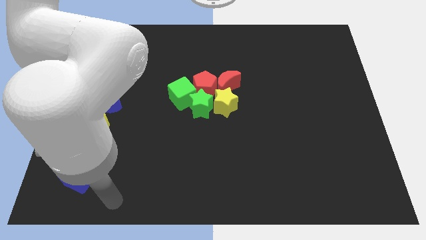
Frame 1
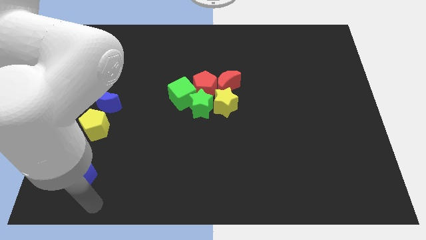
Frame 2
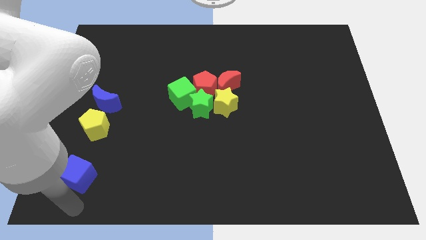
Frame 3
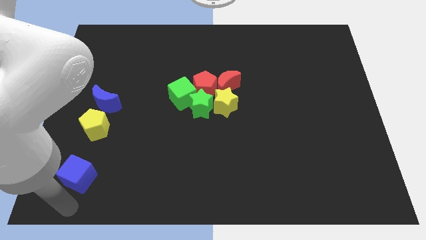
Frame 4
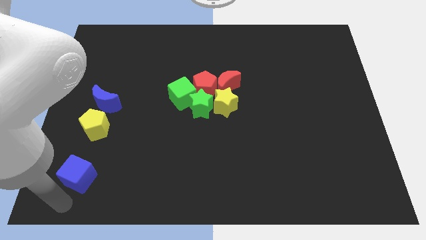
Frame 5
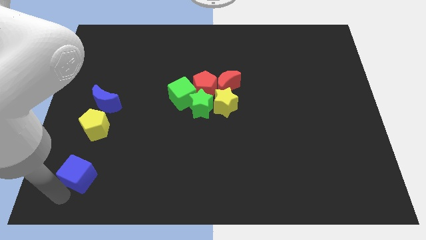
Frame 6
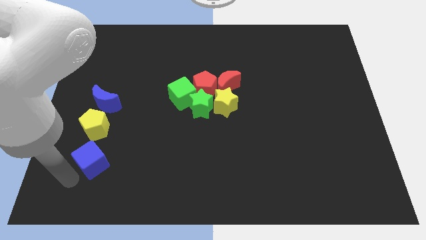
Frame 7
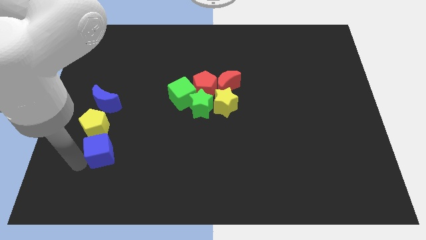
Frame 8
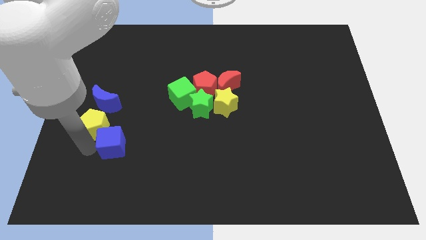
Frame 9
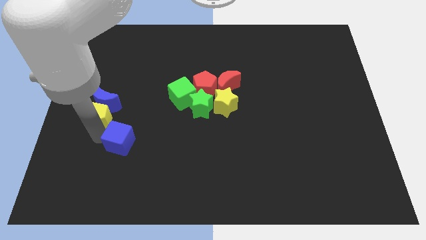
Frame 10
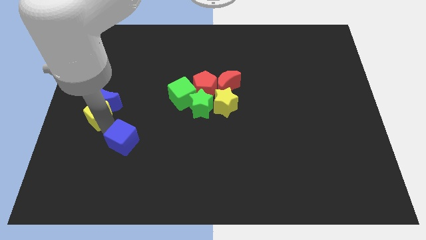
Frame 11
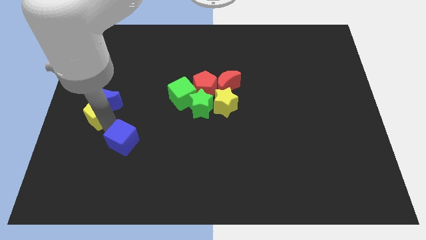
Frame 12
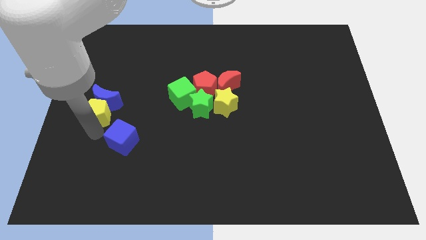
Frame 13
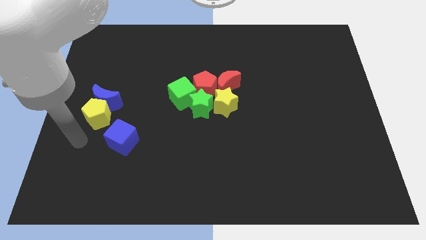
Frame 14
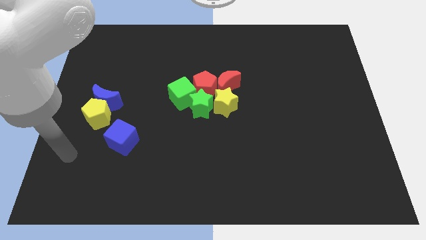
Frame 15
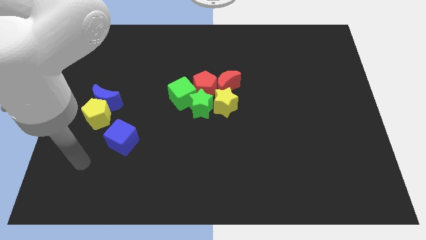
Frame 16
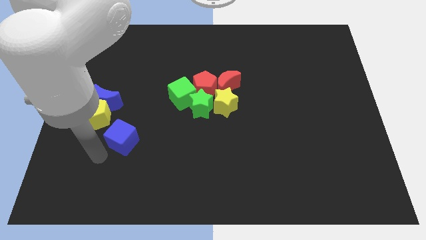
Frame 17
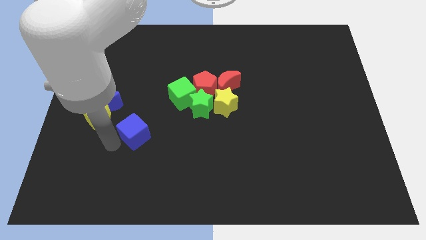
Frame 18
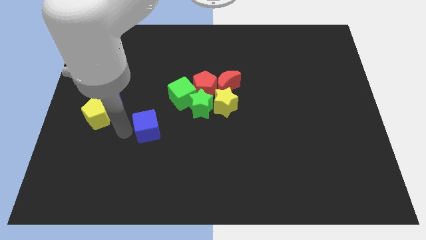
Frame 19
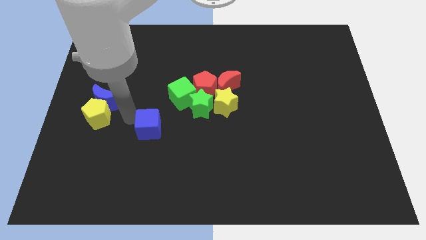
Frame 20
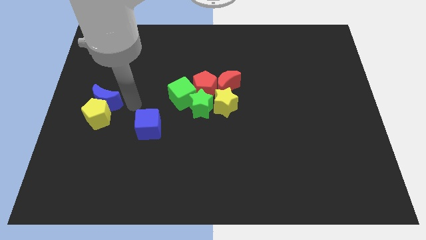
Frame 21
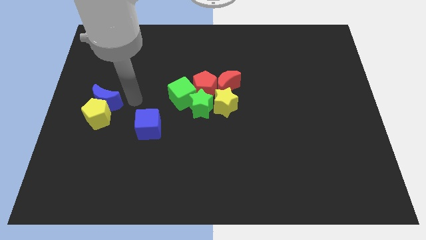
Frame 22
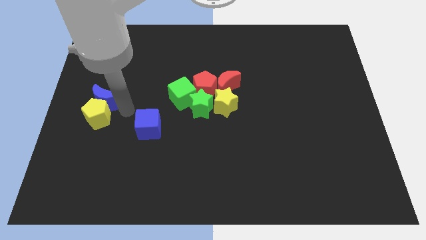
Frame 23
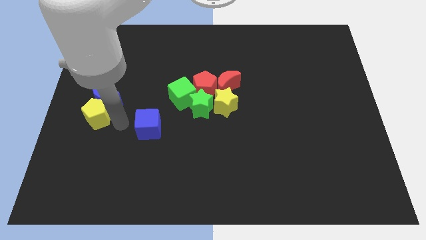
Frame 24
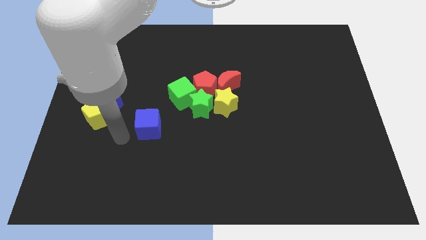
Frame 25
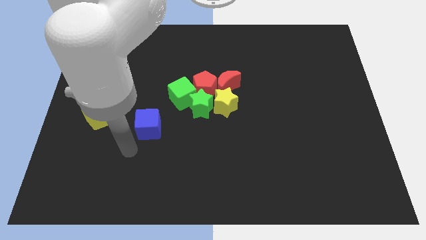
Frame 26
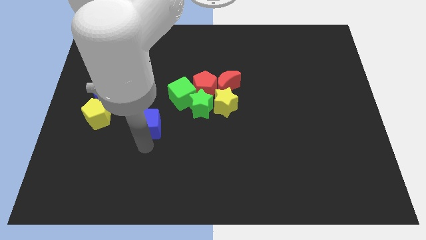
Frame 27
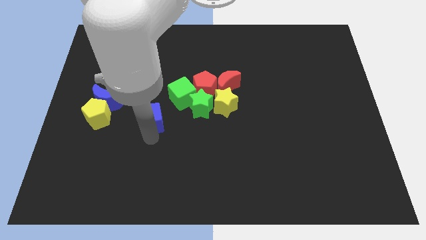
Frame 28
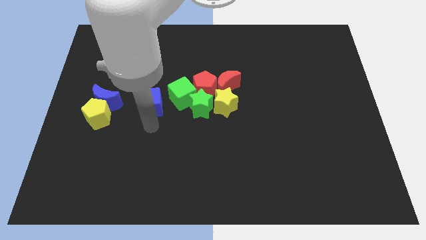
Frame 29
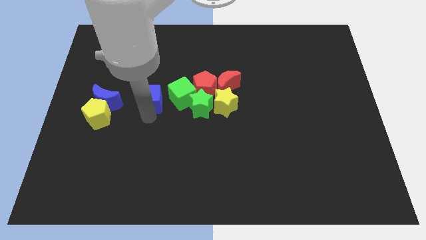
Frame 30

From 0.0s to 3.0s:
place the blue cube in between blue moon and green cube

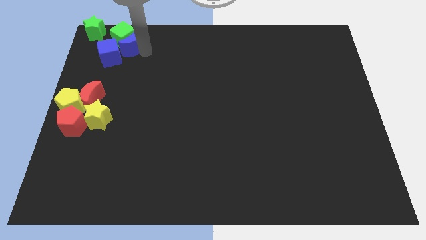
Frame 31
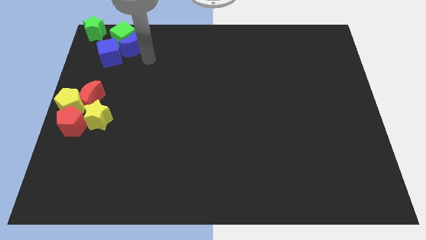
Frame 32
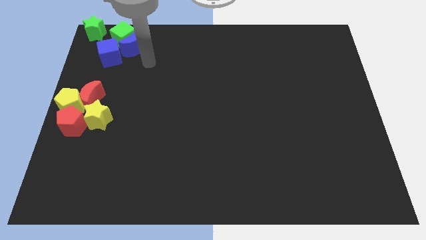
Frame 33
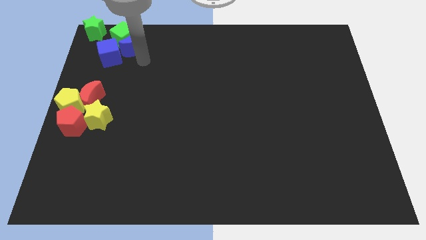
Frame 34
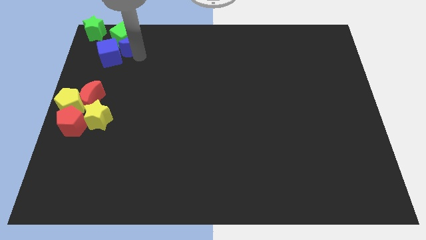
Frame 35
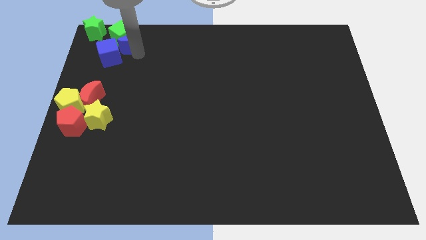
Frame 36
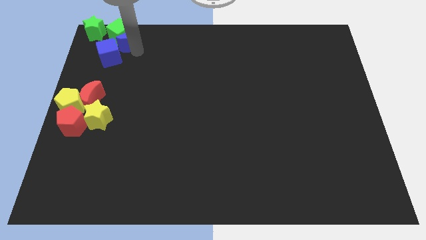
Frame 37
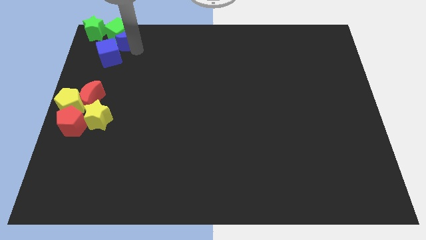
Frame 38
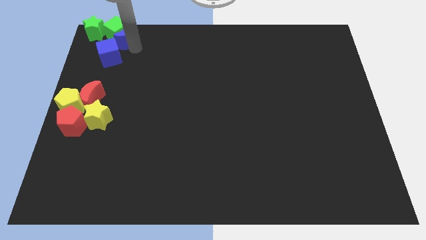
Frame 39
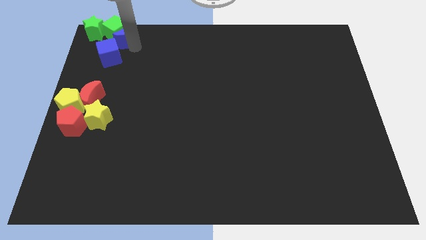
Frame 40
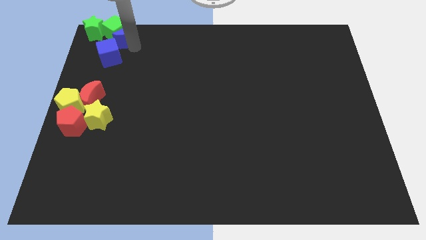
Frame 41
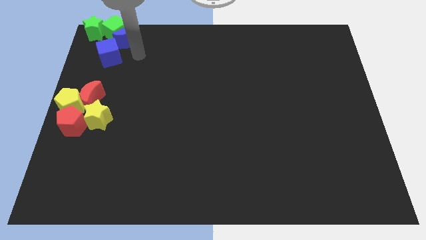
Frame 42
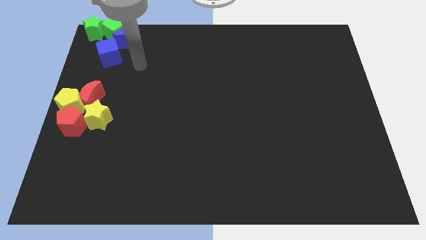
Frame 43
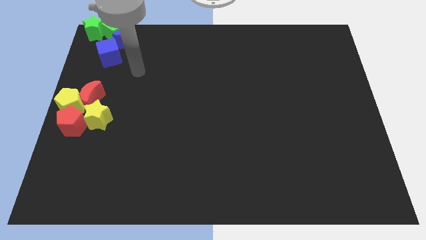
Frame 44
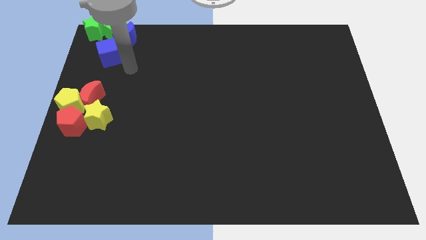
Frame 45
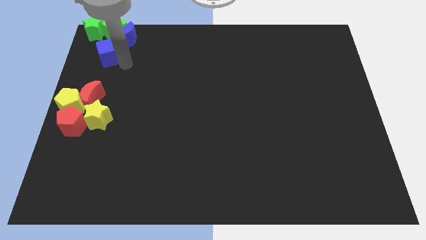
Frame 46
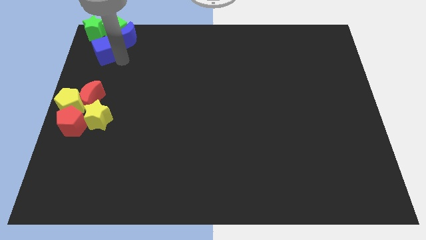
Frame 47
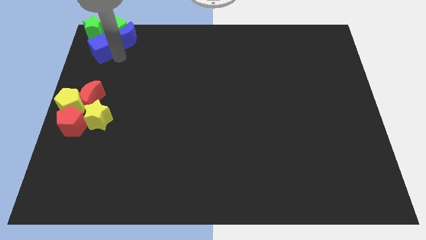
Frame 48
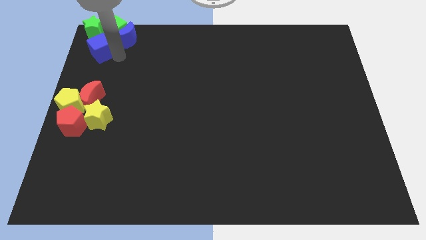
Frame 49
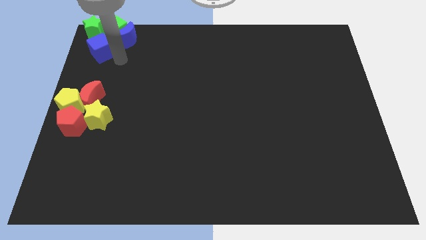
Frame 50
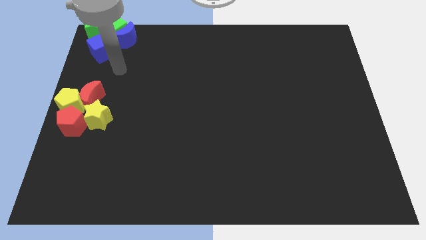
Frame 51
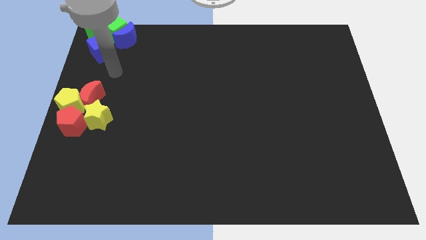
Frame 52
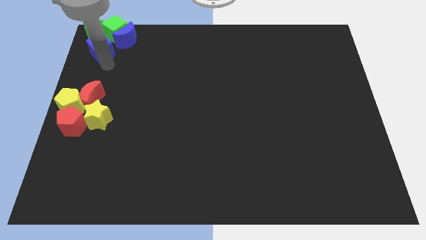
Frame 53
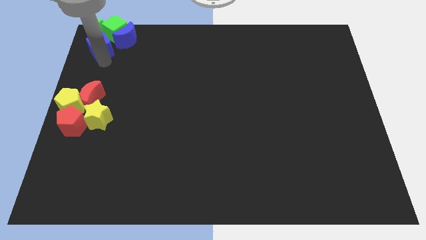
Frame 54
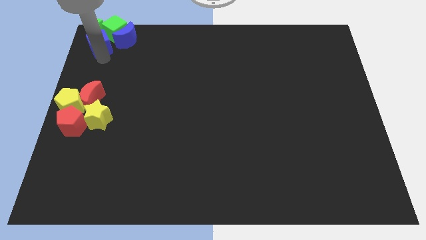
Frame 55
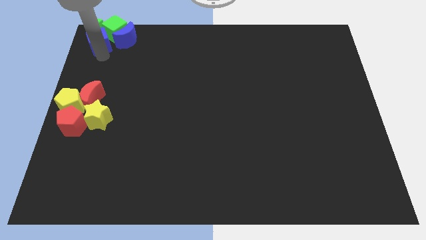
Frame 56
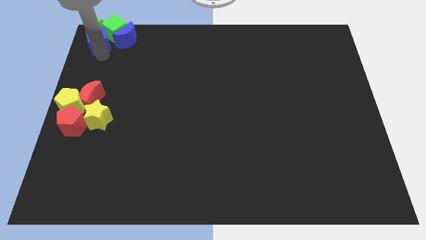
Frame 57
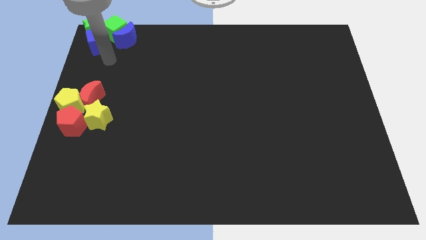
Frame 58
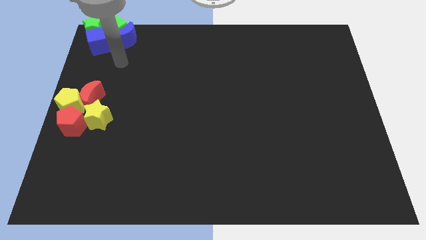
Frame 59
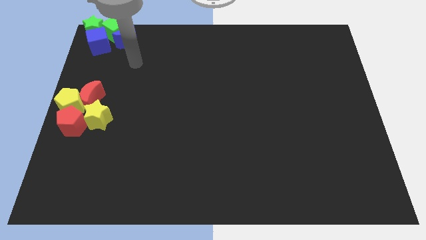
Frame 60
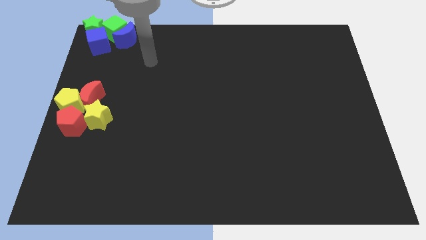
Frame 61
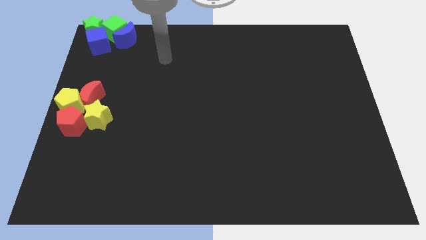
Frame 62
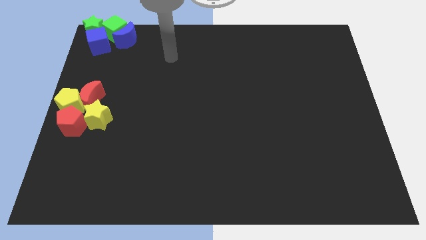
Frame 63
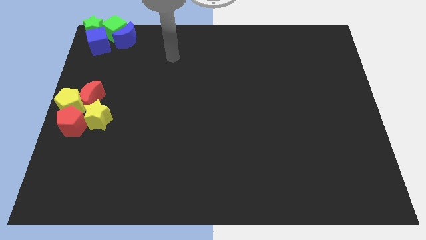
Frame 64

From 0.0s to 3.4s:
move the blue blocks into the green blocks

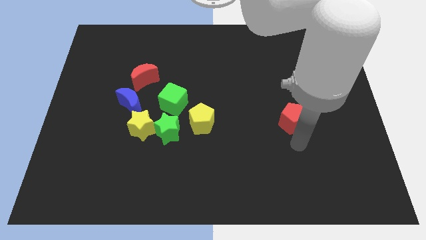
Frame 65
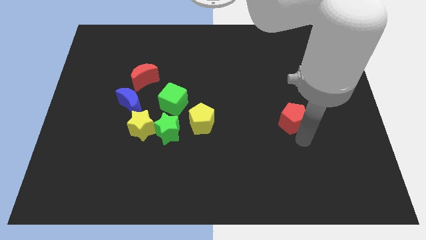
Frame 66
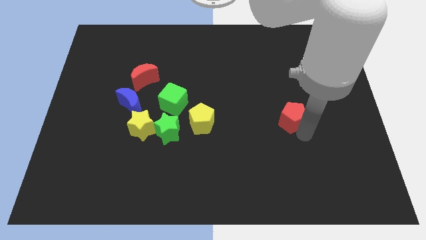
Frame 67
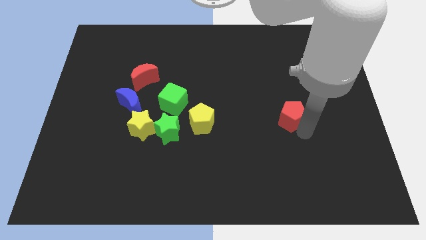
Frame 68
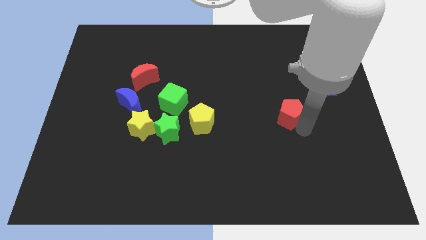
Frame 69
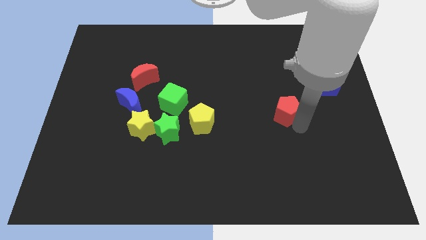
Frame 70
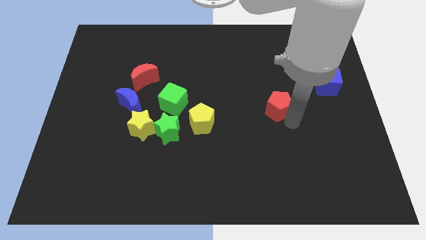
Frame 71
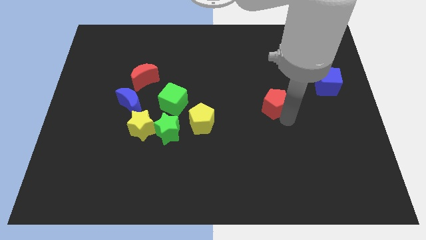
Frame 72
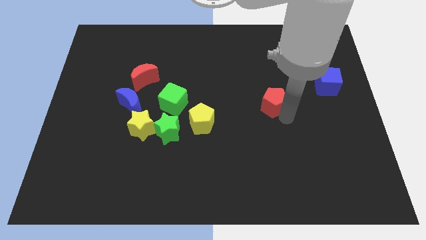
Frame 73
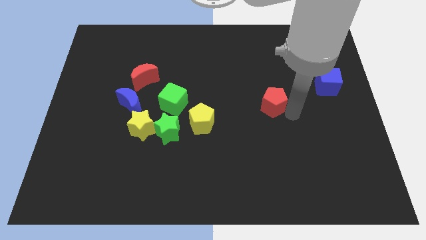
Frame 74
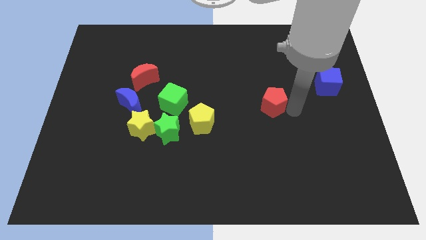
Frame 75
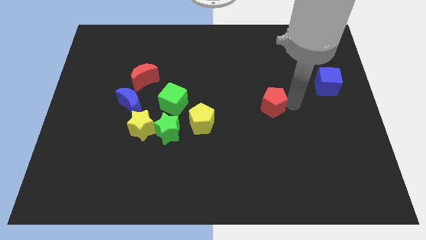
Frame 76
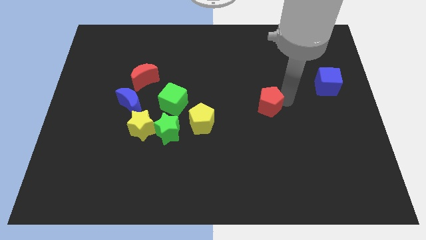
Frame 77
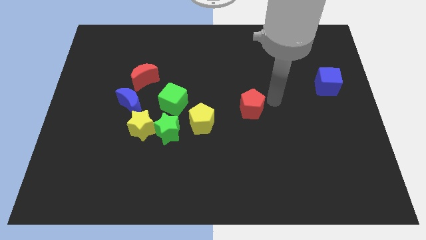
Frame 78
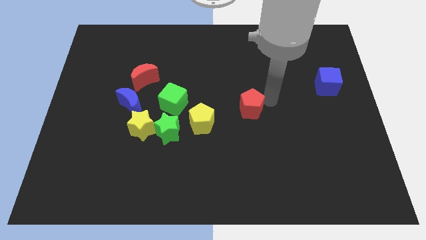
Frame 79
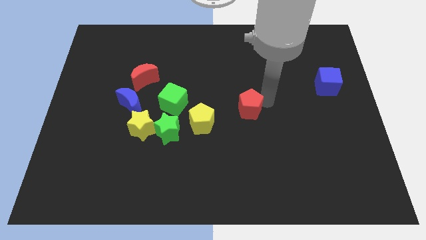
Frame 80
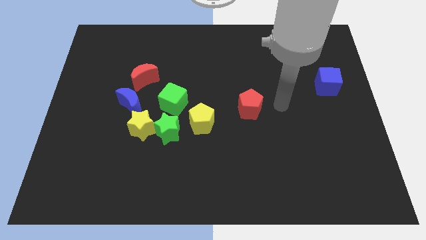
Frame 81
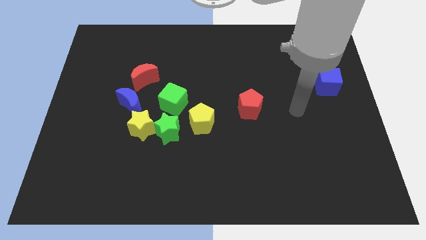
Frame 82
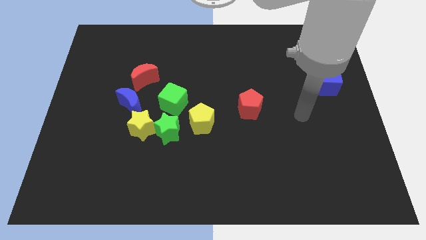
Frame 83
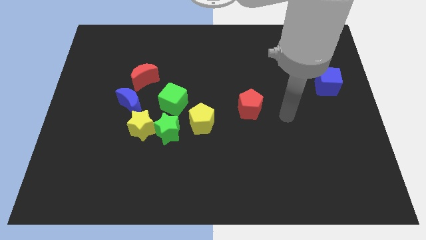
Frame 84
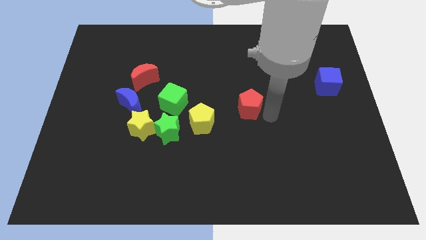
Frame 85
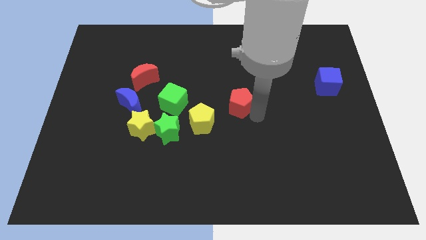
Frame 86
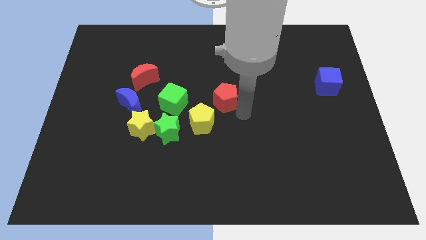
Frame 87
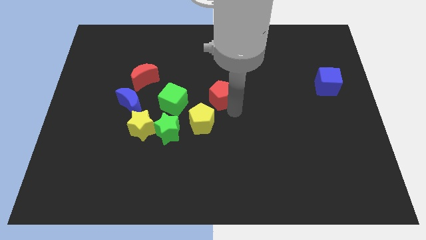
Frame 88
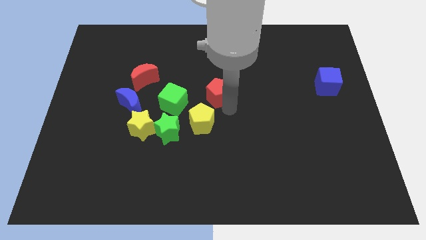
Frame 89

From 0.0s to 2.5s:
place the red pentagon diagonally top right to the yellow pentagon
